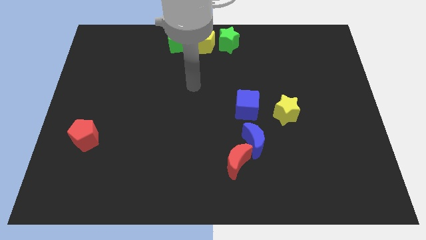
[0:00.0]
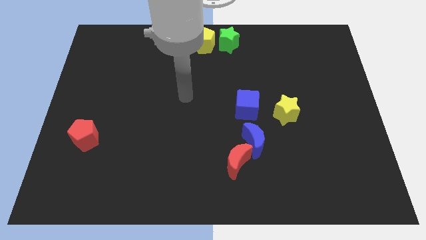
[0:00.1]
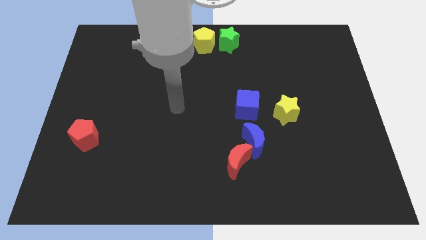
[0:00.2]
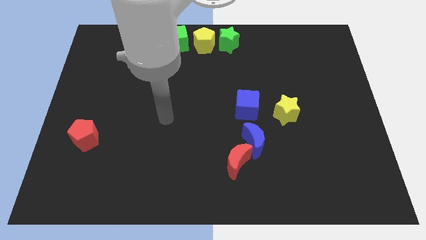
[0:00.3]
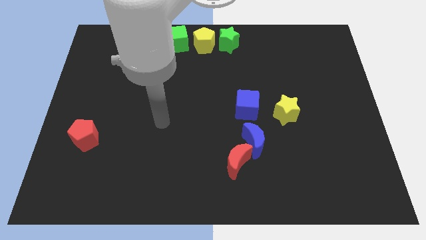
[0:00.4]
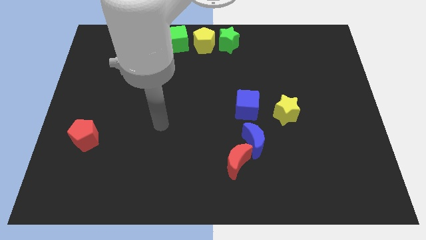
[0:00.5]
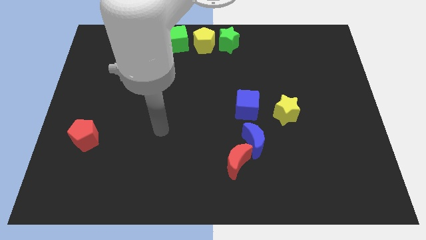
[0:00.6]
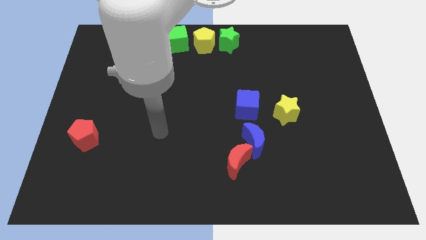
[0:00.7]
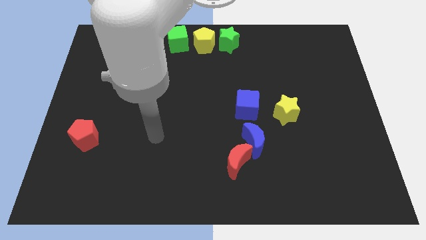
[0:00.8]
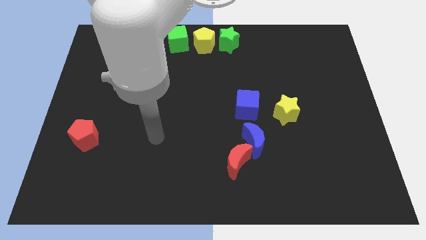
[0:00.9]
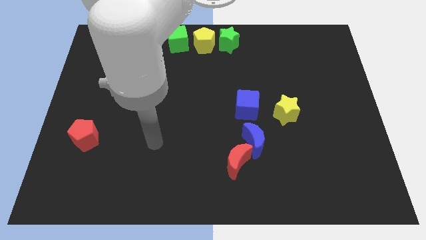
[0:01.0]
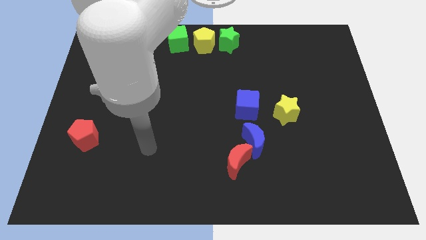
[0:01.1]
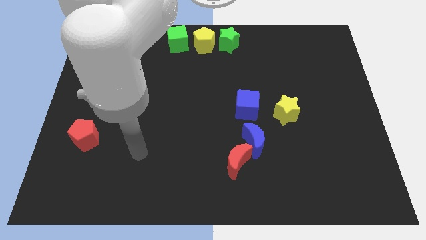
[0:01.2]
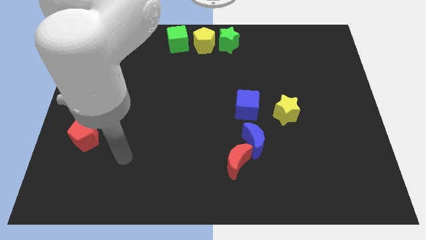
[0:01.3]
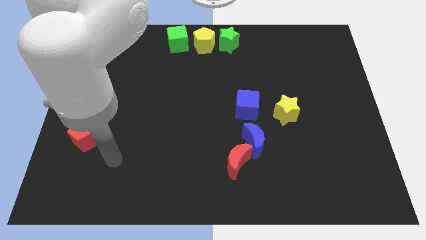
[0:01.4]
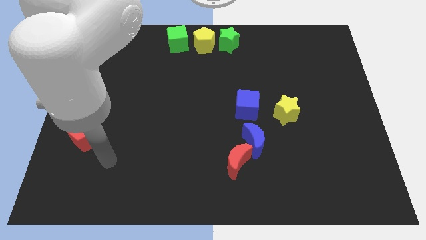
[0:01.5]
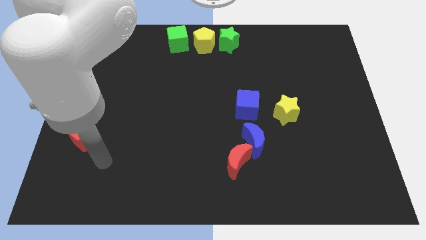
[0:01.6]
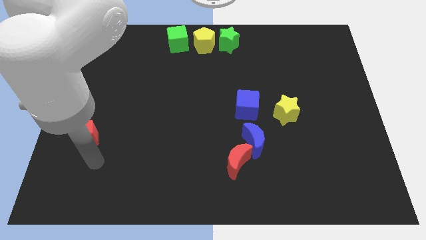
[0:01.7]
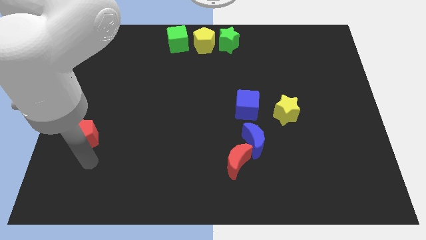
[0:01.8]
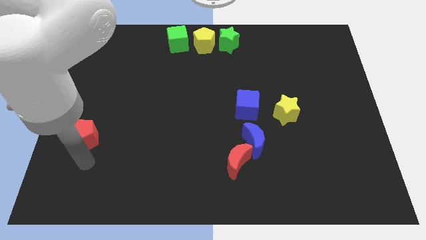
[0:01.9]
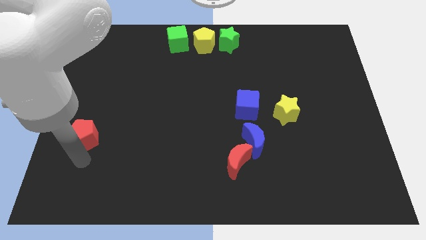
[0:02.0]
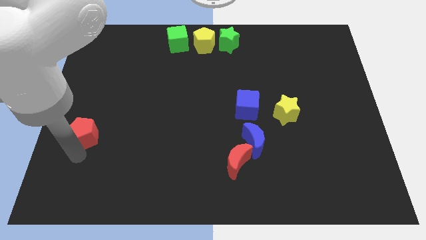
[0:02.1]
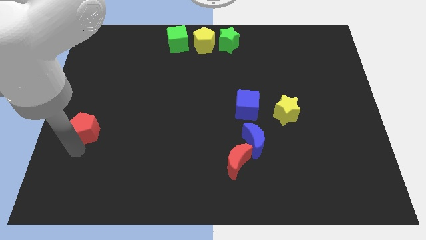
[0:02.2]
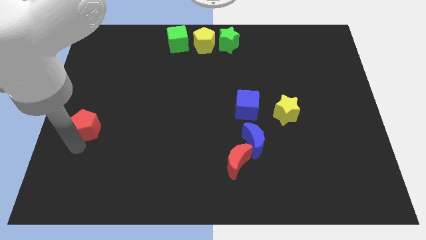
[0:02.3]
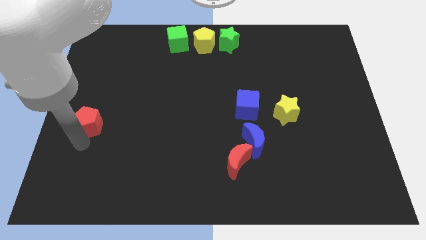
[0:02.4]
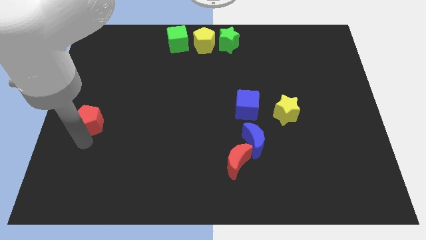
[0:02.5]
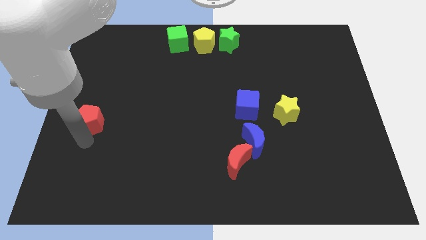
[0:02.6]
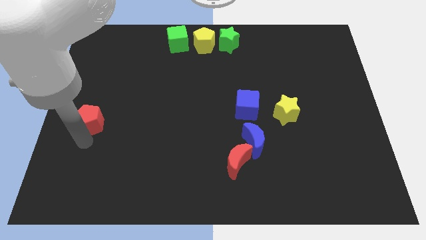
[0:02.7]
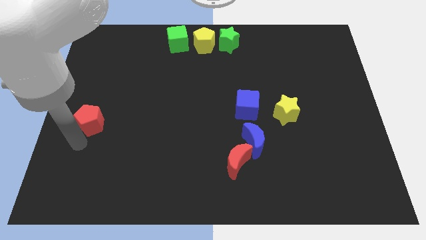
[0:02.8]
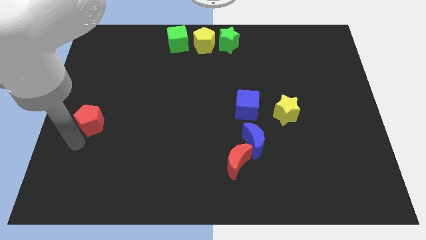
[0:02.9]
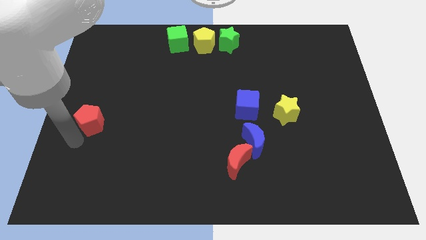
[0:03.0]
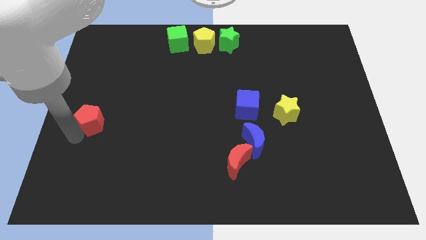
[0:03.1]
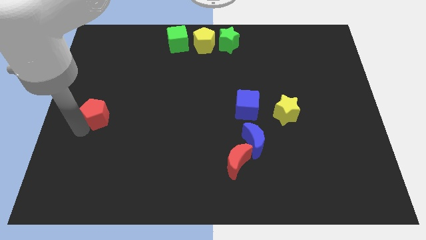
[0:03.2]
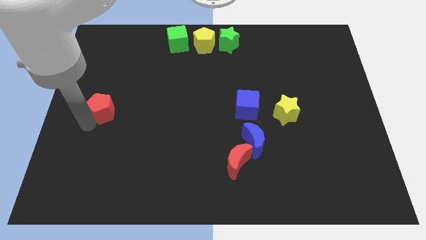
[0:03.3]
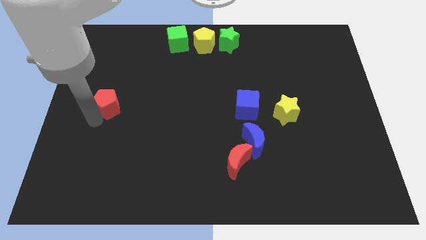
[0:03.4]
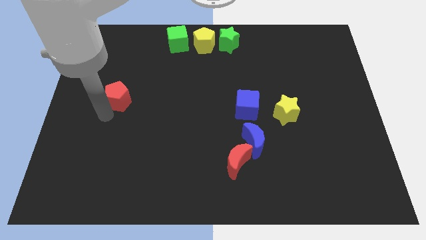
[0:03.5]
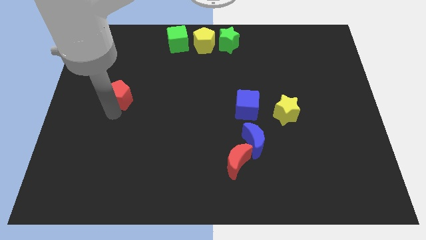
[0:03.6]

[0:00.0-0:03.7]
slide the red pentagon to the top side of the board

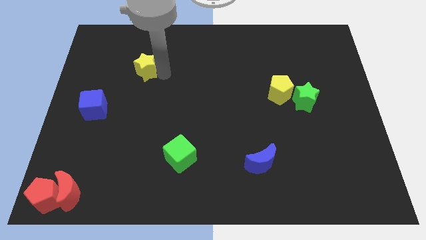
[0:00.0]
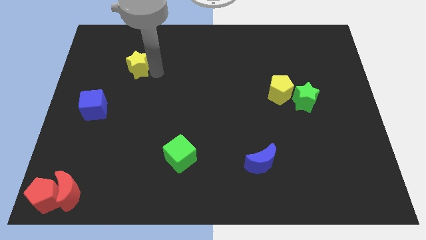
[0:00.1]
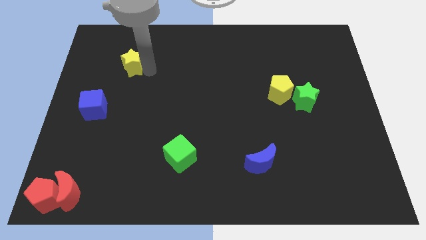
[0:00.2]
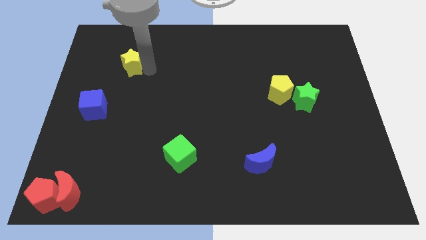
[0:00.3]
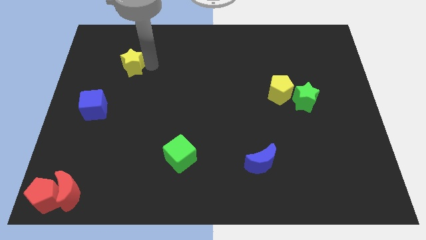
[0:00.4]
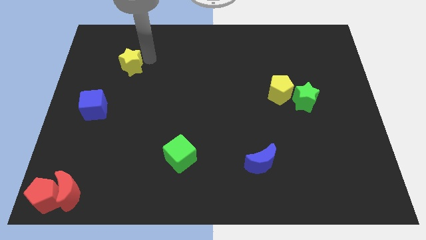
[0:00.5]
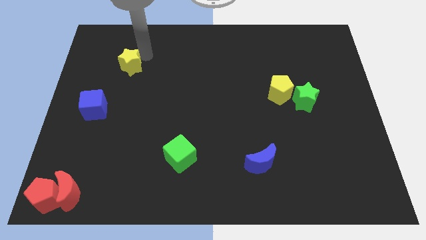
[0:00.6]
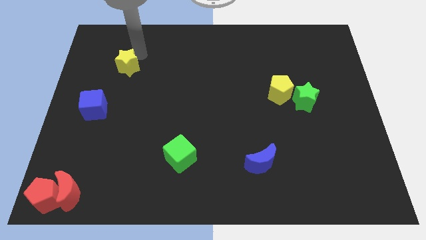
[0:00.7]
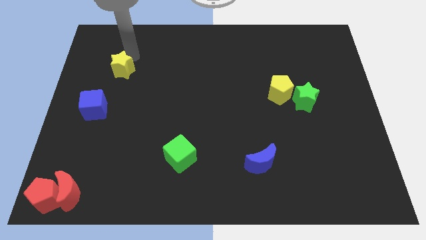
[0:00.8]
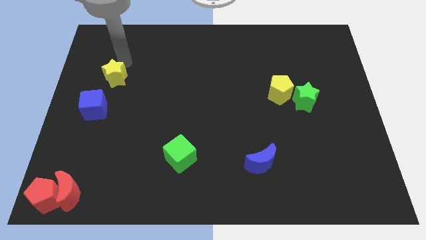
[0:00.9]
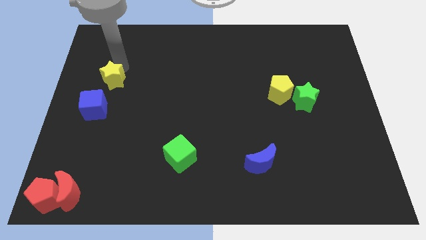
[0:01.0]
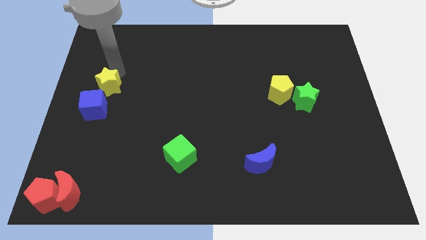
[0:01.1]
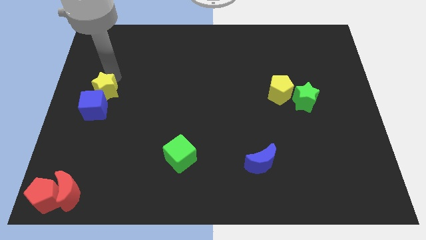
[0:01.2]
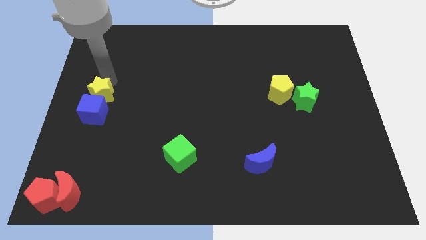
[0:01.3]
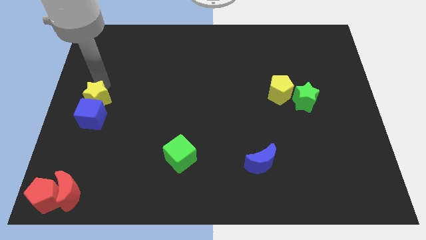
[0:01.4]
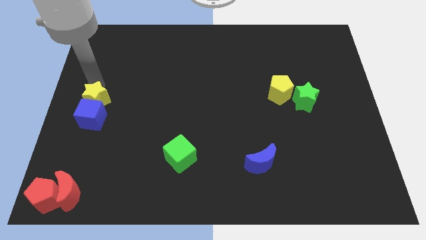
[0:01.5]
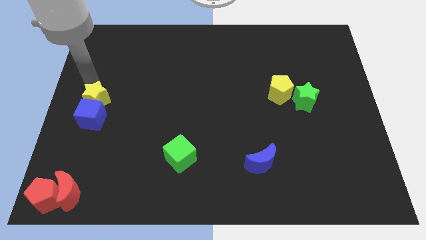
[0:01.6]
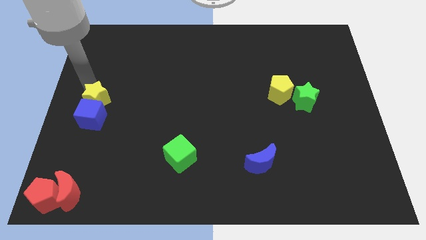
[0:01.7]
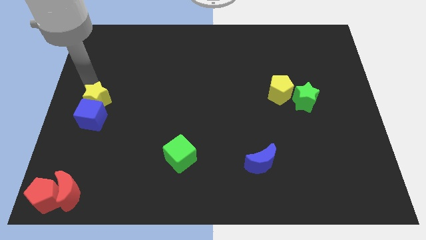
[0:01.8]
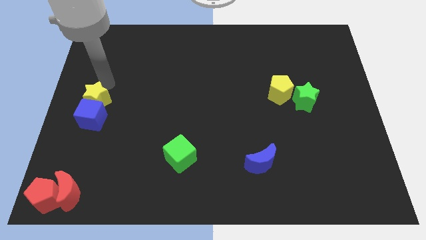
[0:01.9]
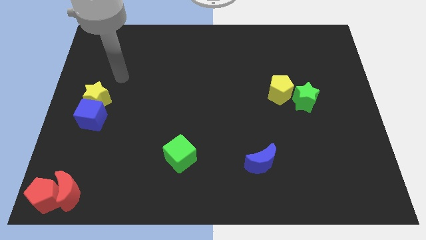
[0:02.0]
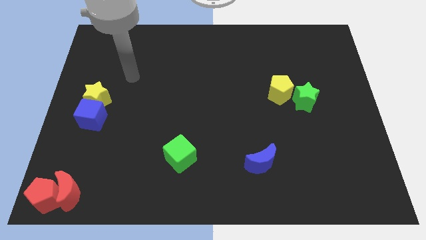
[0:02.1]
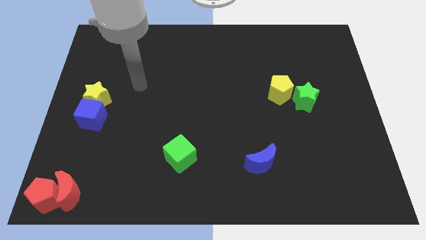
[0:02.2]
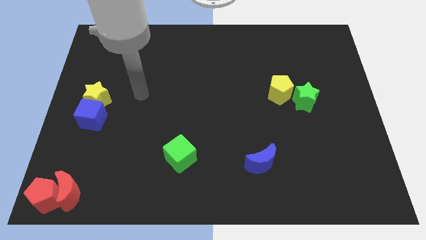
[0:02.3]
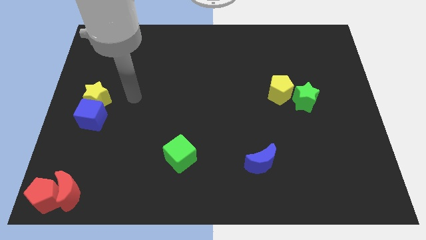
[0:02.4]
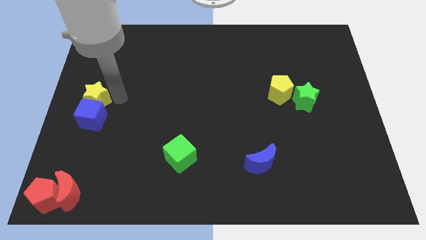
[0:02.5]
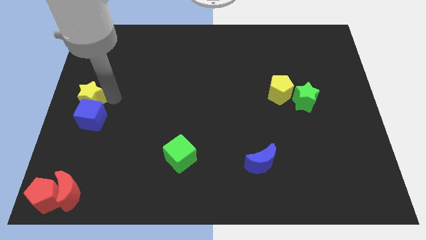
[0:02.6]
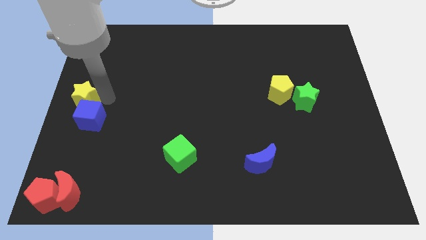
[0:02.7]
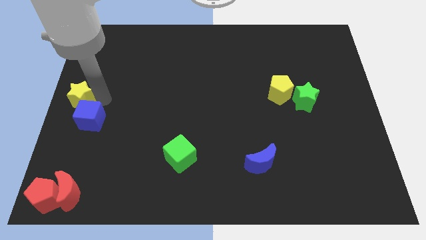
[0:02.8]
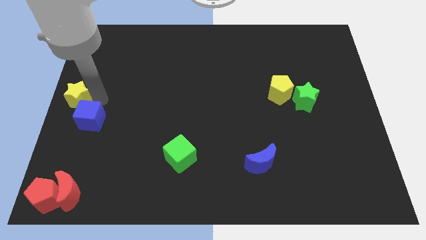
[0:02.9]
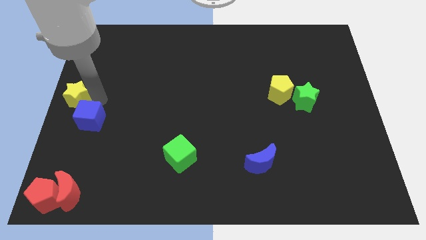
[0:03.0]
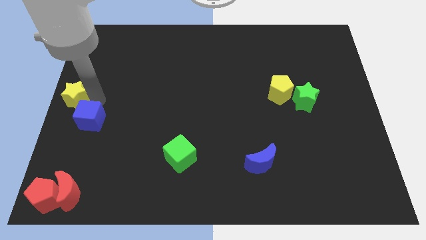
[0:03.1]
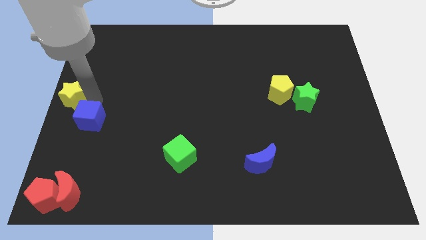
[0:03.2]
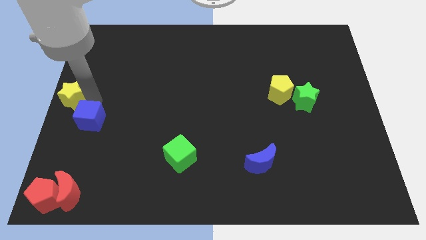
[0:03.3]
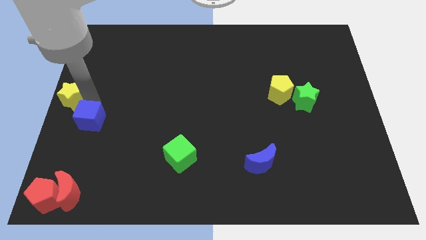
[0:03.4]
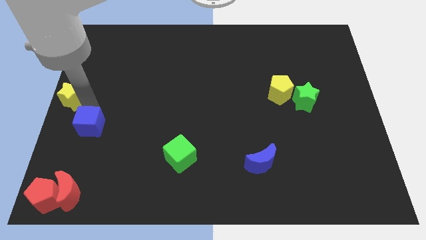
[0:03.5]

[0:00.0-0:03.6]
push the yellow star to the left center of the boards

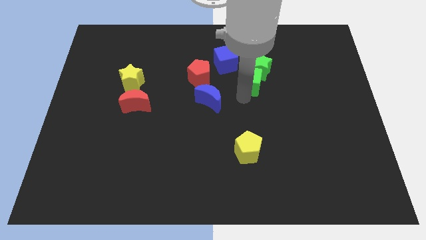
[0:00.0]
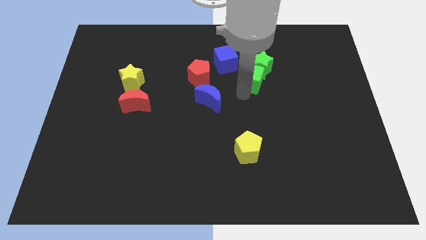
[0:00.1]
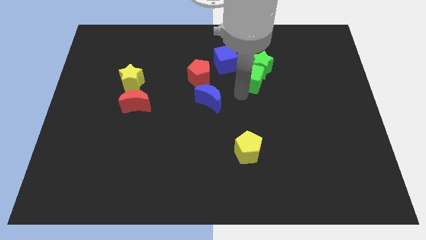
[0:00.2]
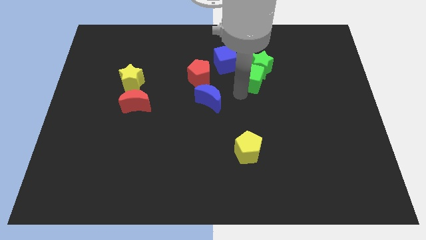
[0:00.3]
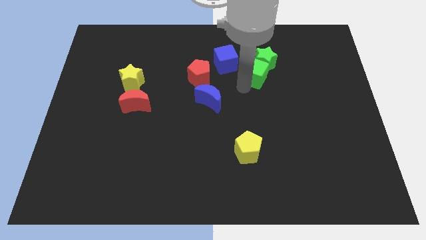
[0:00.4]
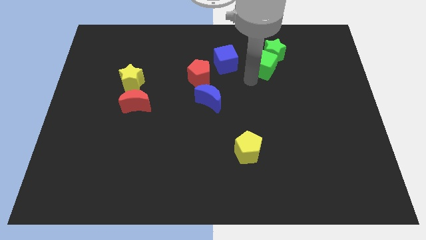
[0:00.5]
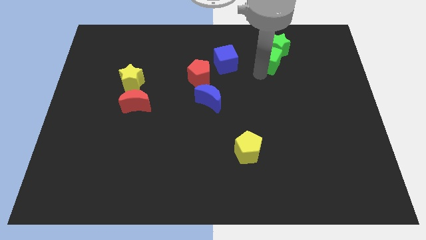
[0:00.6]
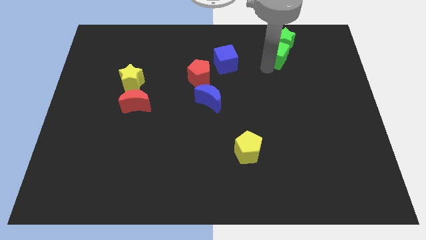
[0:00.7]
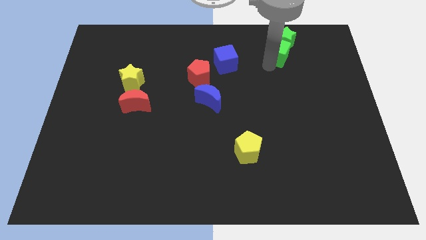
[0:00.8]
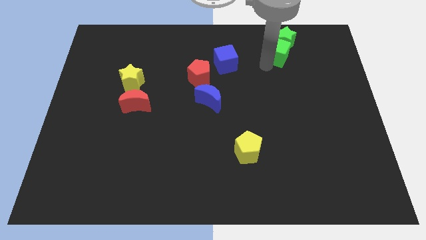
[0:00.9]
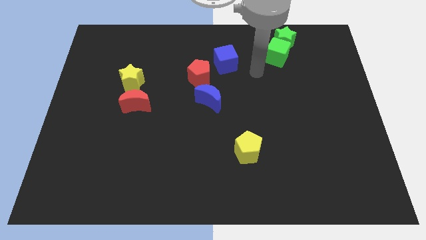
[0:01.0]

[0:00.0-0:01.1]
push green blocks diagonally to the top

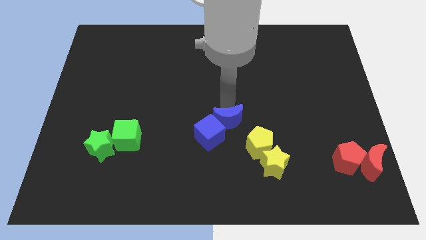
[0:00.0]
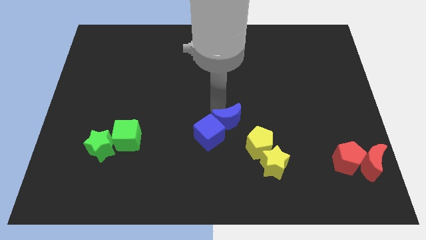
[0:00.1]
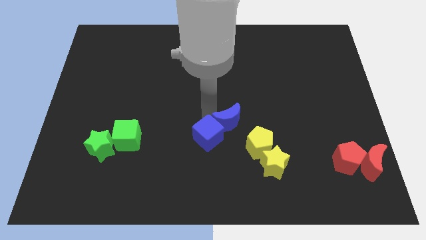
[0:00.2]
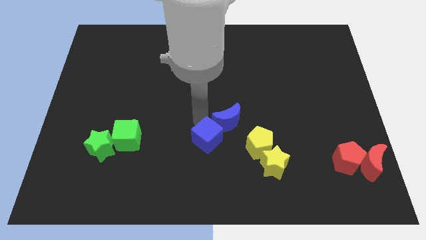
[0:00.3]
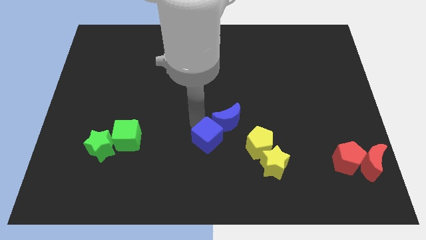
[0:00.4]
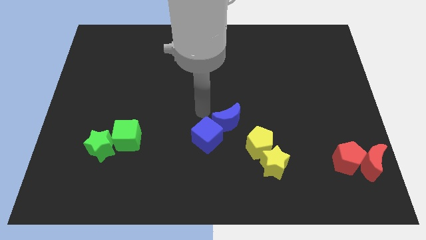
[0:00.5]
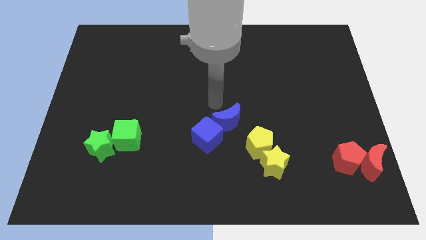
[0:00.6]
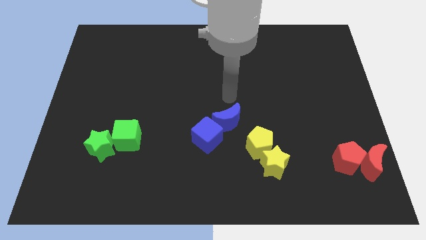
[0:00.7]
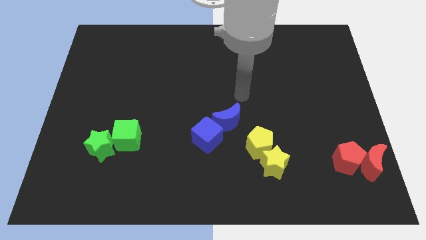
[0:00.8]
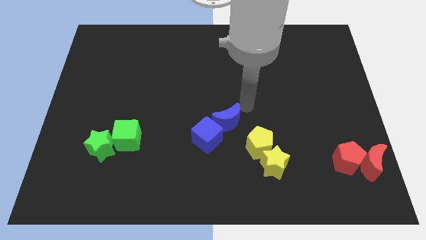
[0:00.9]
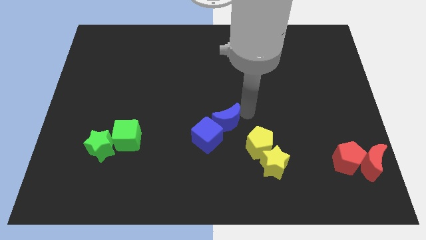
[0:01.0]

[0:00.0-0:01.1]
move the arm to the right of the blue moon
